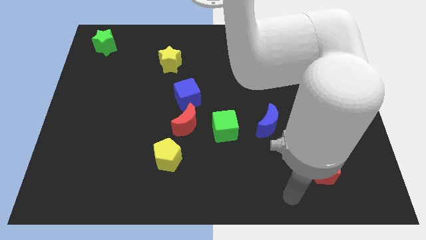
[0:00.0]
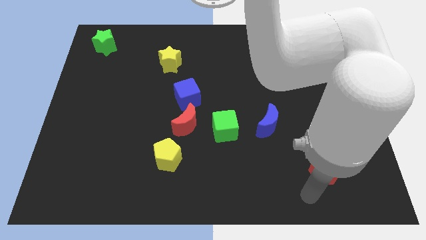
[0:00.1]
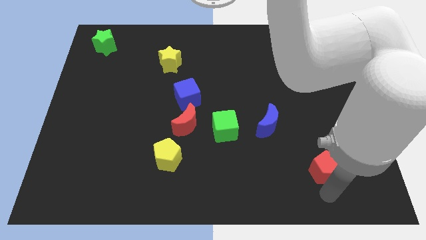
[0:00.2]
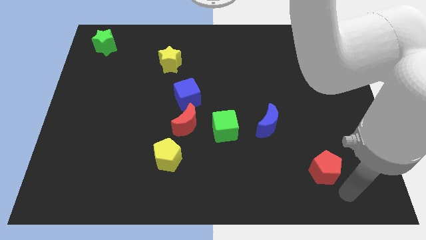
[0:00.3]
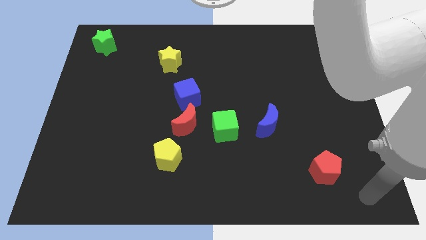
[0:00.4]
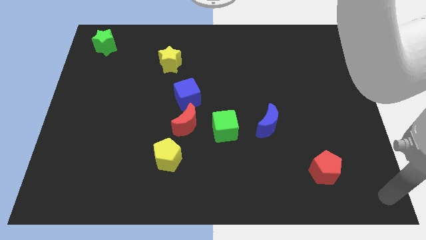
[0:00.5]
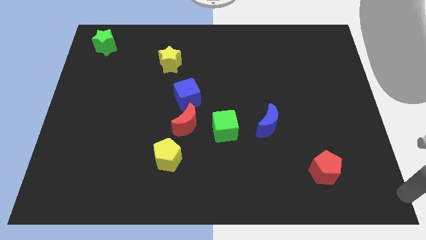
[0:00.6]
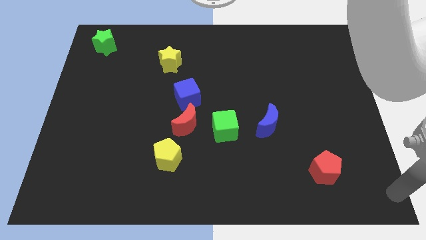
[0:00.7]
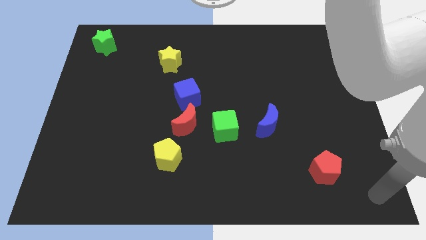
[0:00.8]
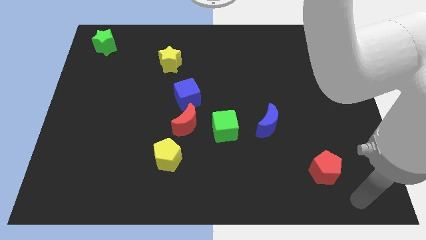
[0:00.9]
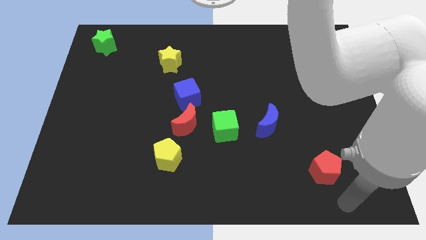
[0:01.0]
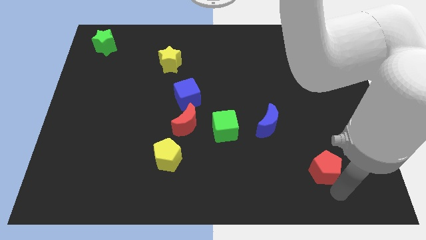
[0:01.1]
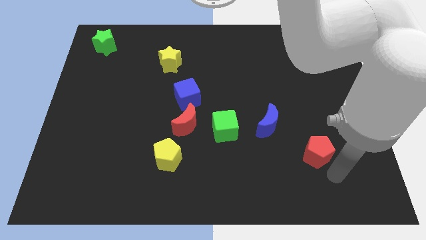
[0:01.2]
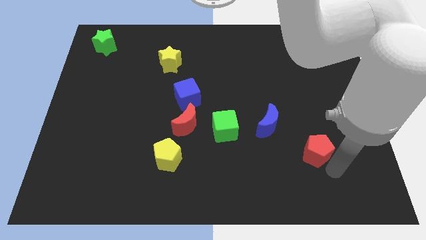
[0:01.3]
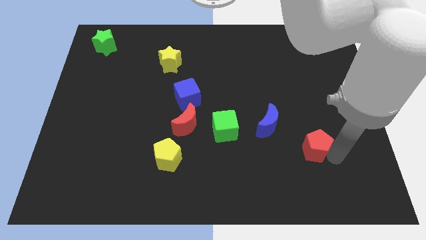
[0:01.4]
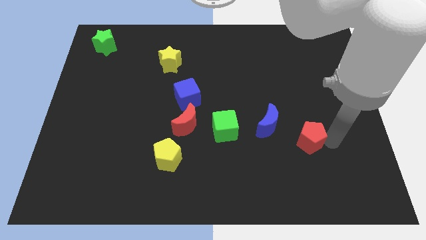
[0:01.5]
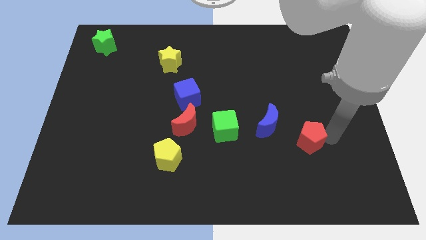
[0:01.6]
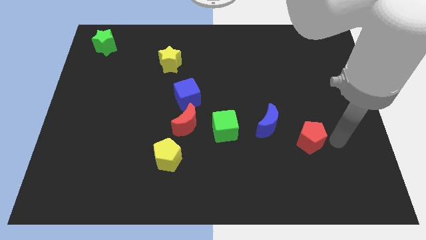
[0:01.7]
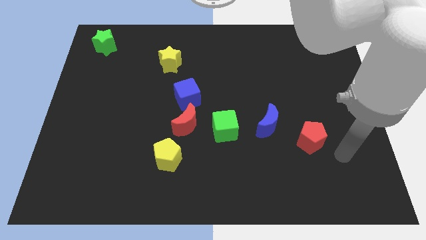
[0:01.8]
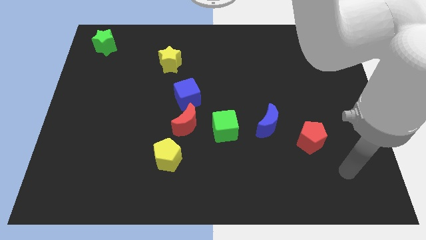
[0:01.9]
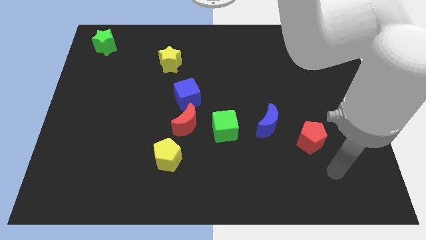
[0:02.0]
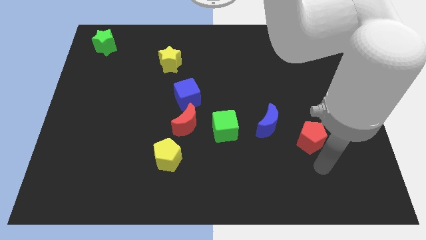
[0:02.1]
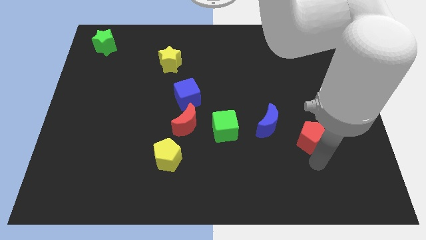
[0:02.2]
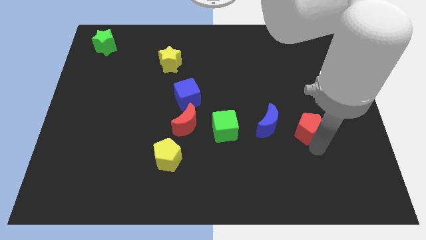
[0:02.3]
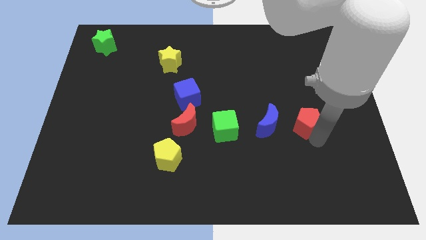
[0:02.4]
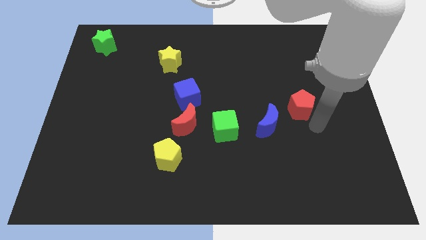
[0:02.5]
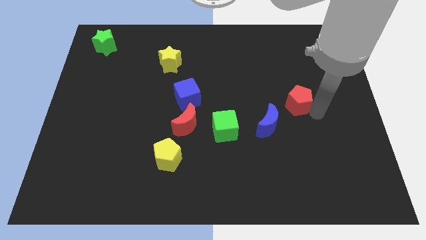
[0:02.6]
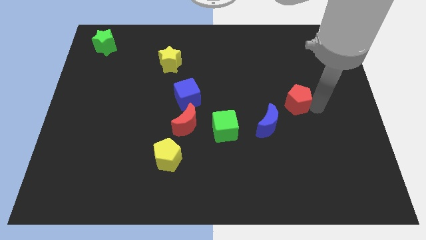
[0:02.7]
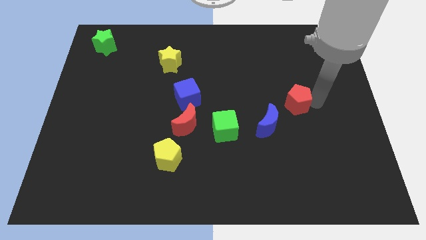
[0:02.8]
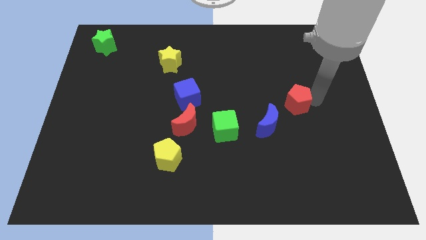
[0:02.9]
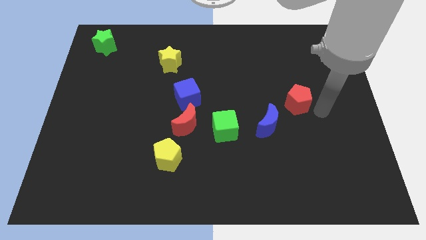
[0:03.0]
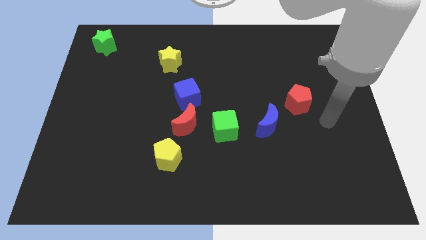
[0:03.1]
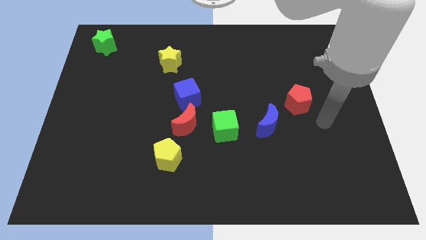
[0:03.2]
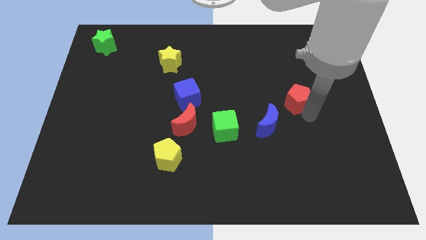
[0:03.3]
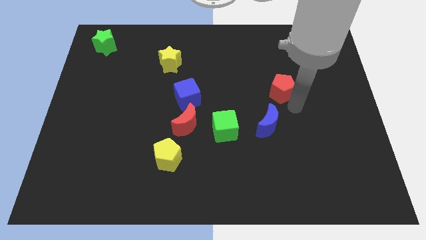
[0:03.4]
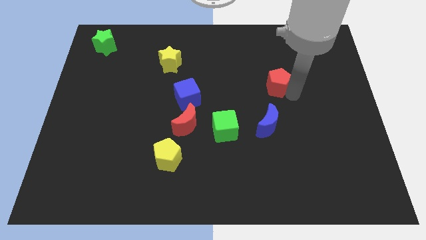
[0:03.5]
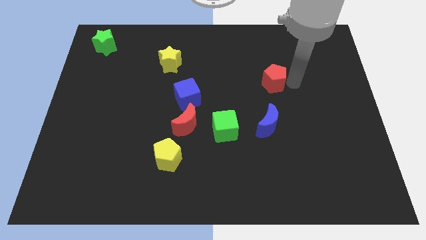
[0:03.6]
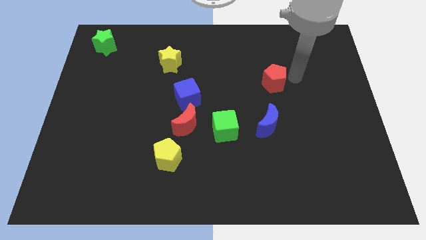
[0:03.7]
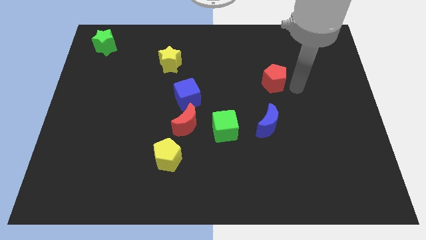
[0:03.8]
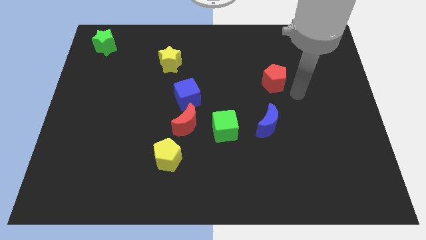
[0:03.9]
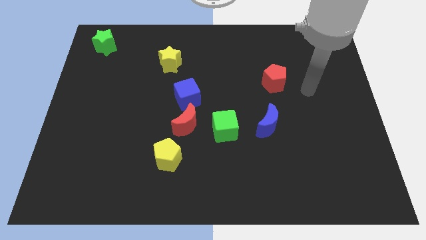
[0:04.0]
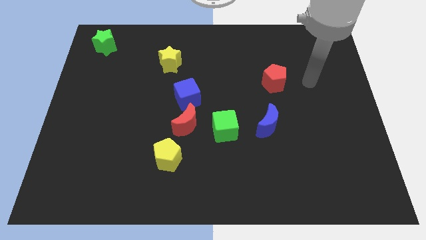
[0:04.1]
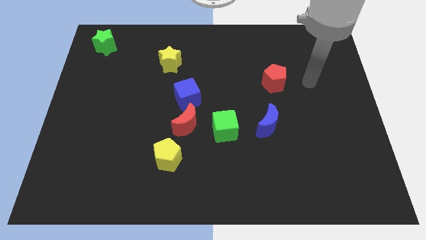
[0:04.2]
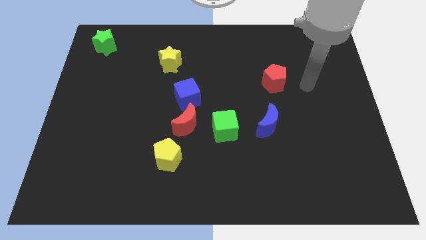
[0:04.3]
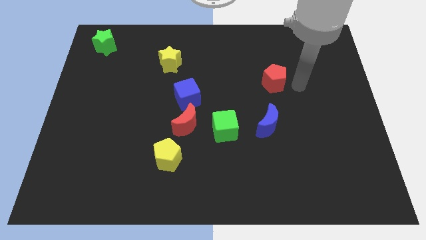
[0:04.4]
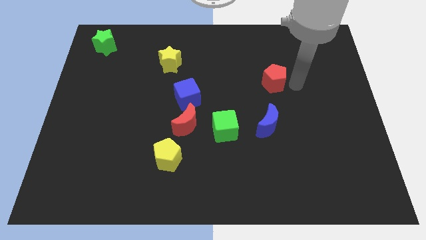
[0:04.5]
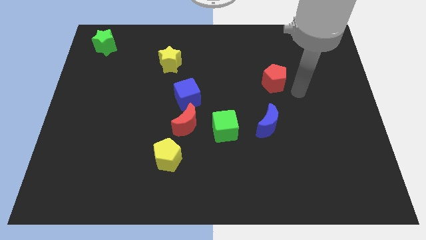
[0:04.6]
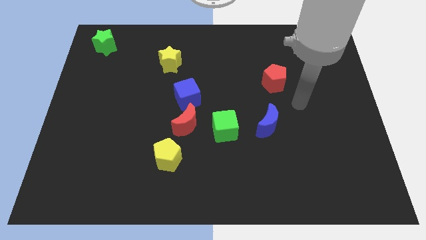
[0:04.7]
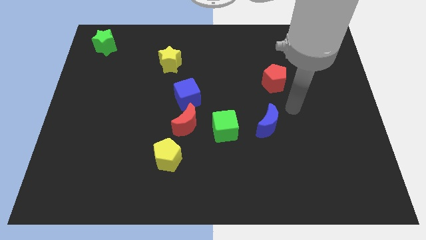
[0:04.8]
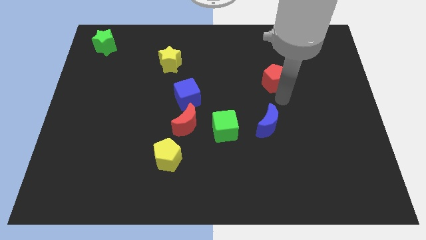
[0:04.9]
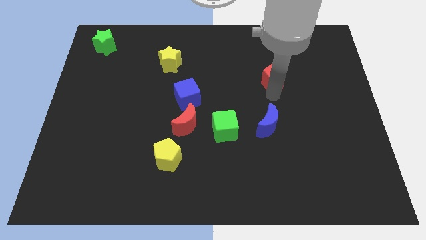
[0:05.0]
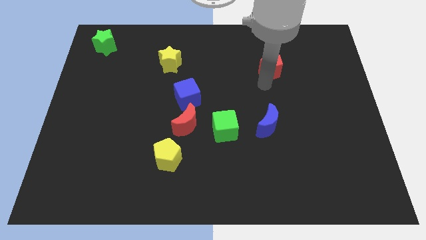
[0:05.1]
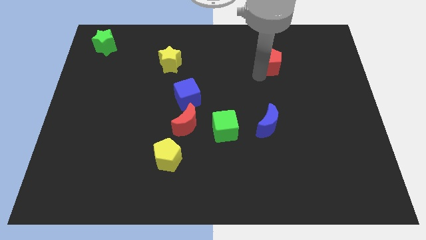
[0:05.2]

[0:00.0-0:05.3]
place the red pentagon vertically above the blue moon

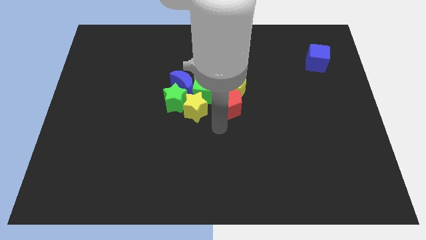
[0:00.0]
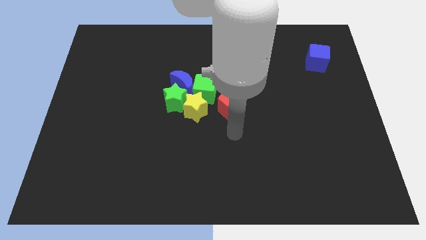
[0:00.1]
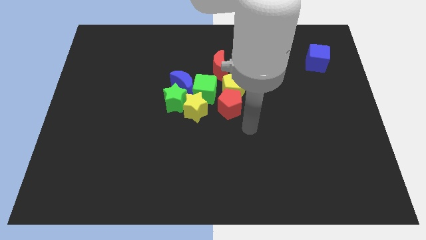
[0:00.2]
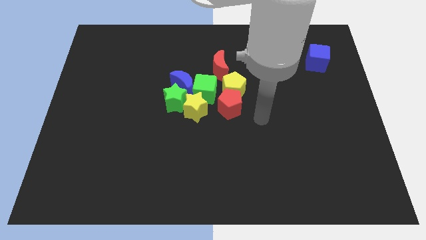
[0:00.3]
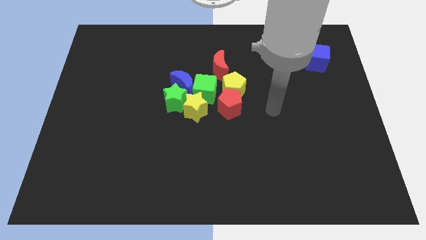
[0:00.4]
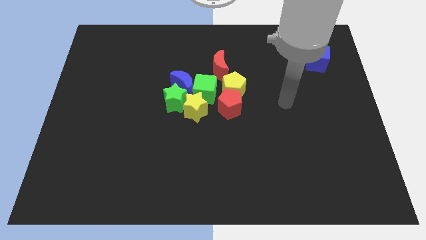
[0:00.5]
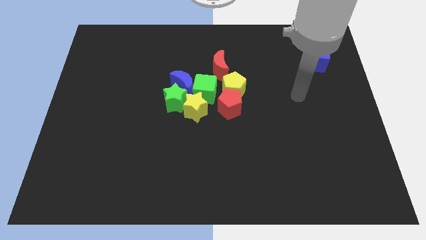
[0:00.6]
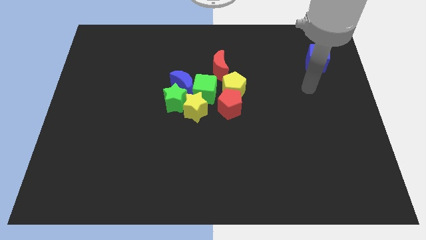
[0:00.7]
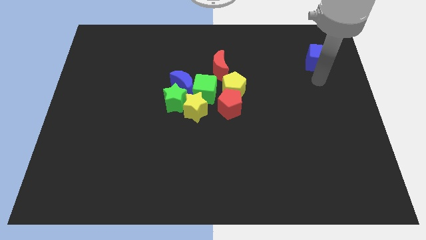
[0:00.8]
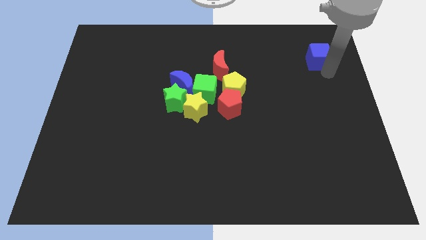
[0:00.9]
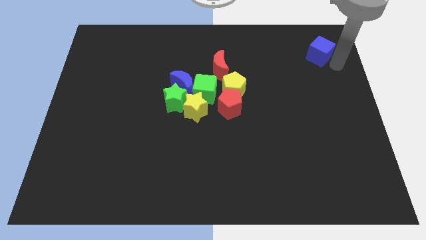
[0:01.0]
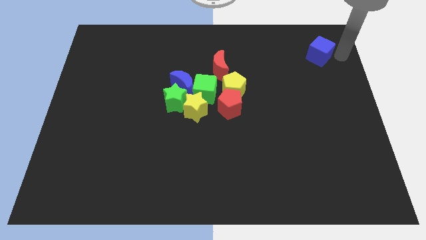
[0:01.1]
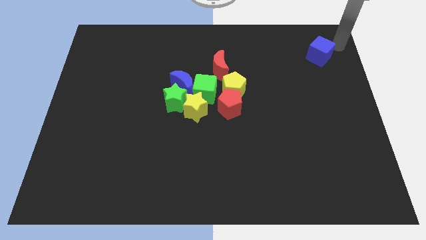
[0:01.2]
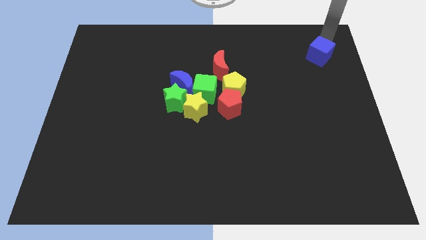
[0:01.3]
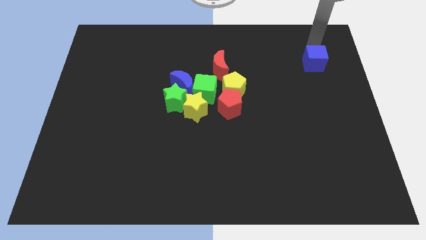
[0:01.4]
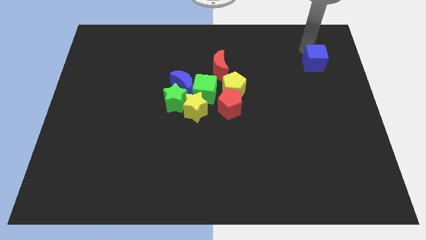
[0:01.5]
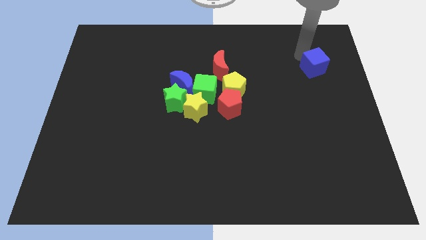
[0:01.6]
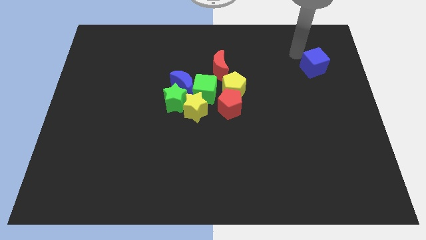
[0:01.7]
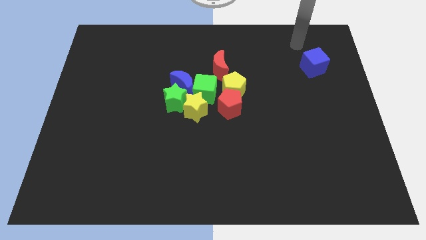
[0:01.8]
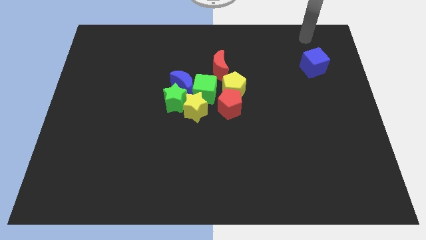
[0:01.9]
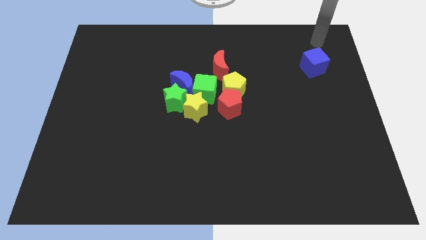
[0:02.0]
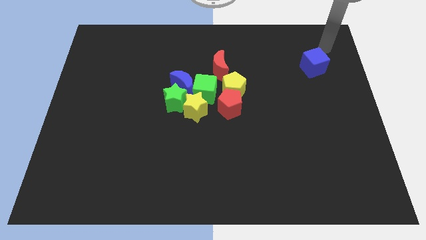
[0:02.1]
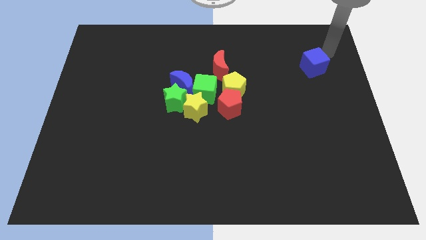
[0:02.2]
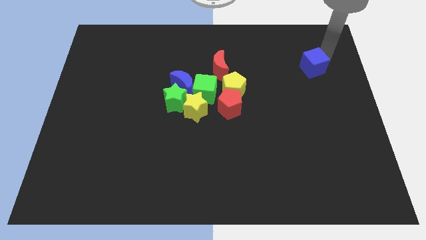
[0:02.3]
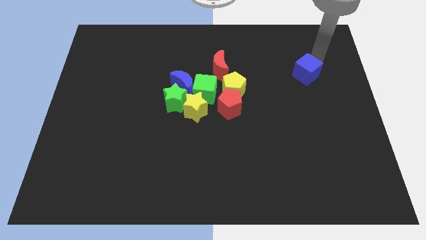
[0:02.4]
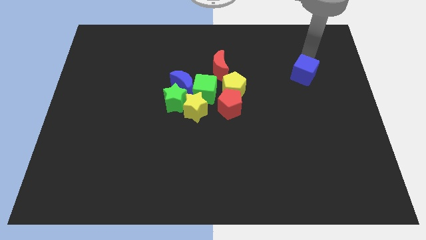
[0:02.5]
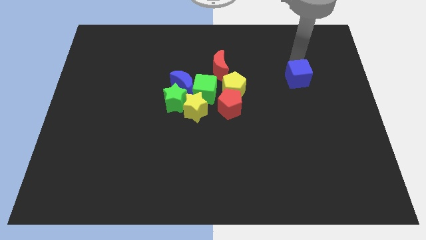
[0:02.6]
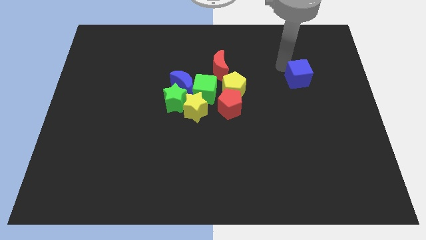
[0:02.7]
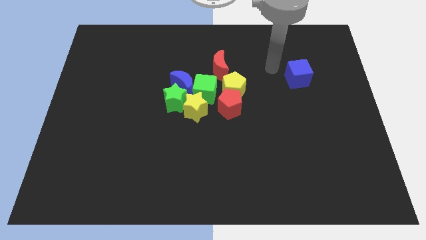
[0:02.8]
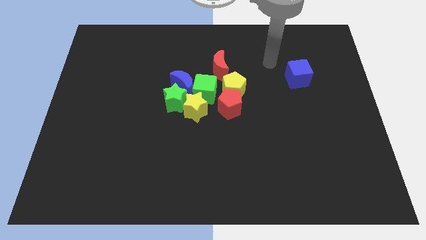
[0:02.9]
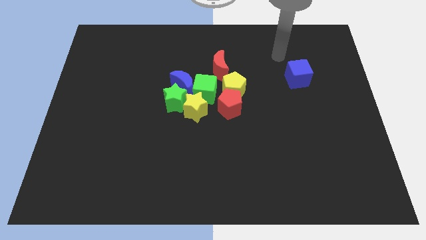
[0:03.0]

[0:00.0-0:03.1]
slide the blue cube towards the center

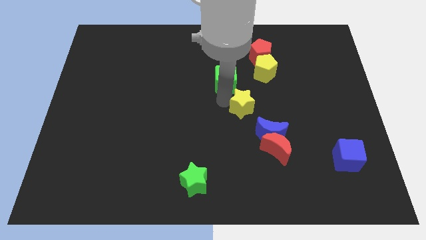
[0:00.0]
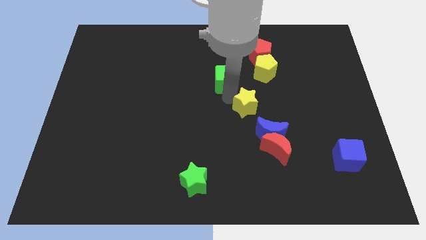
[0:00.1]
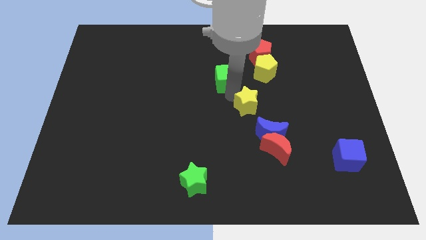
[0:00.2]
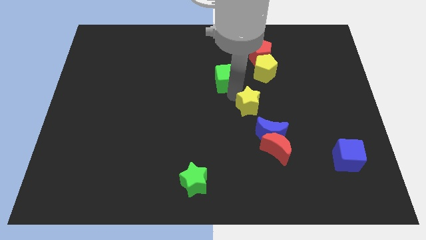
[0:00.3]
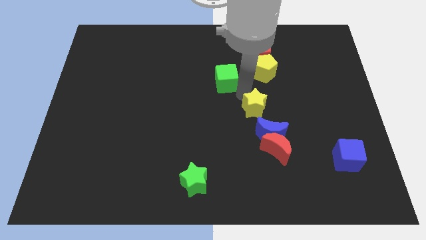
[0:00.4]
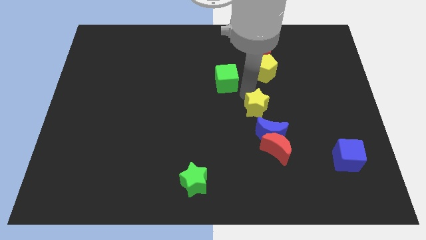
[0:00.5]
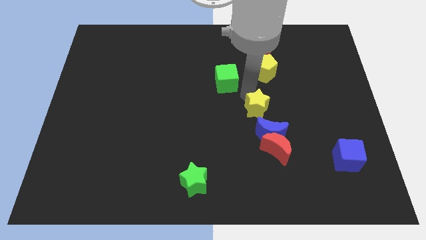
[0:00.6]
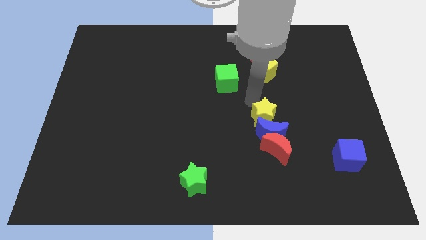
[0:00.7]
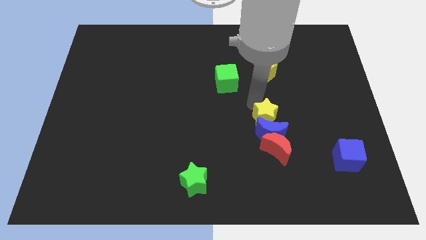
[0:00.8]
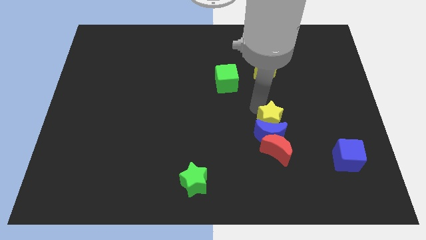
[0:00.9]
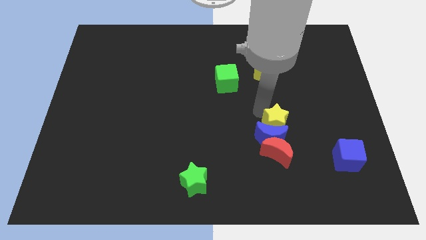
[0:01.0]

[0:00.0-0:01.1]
push the yellow star into the blue moon
